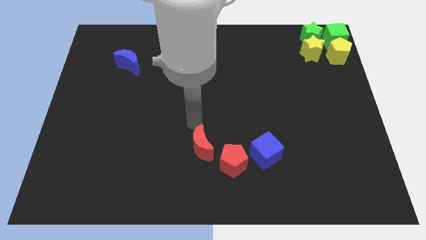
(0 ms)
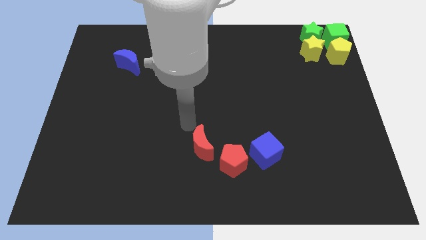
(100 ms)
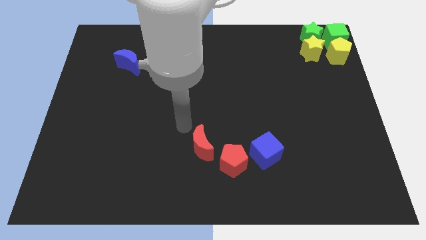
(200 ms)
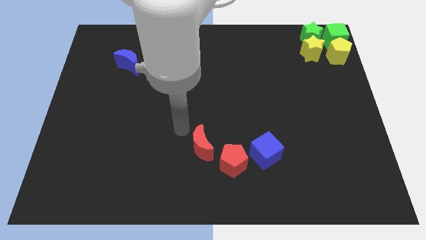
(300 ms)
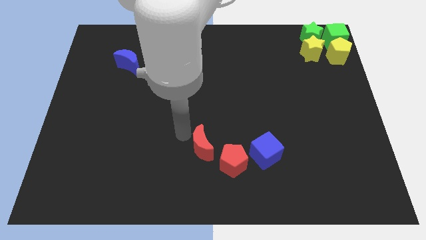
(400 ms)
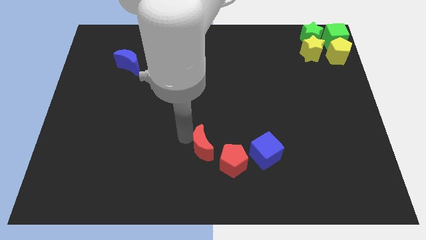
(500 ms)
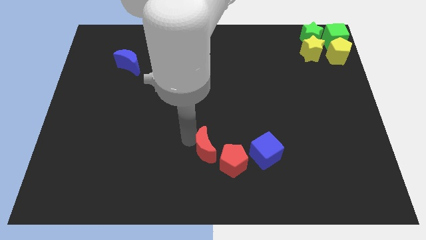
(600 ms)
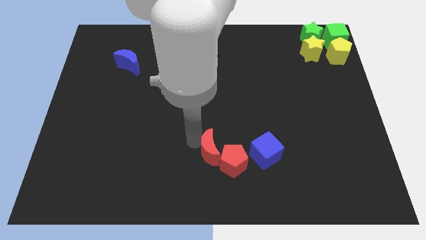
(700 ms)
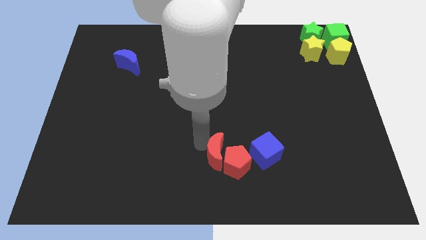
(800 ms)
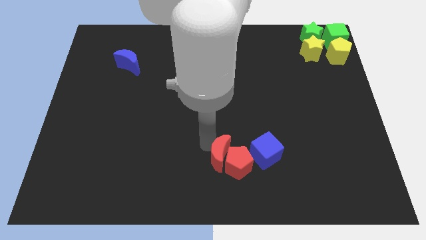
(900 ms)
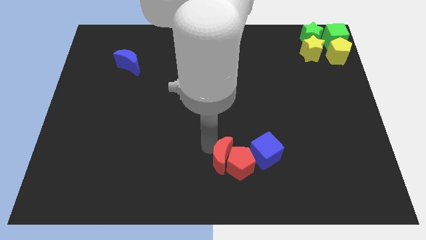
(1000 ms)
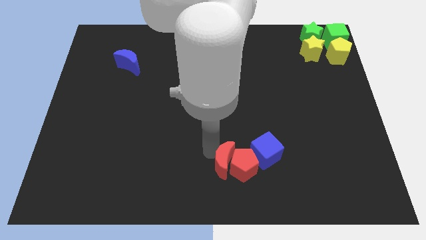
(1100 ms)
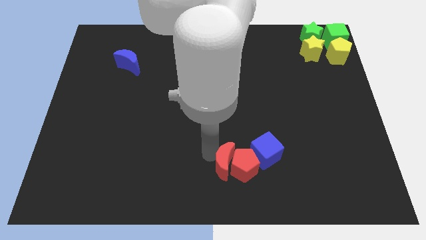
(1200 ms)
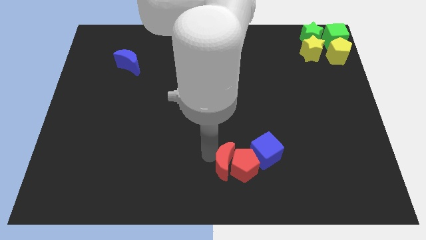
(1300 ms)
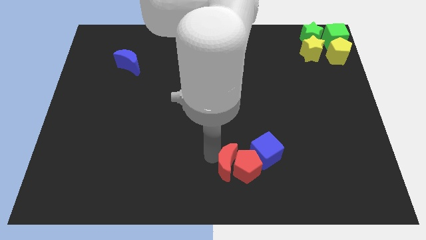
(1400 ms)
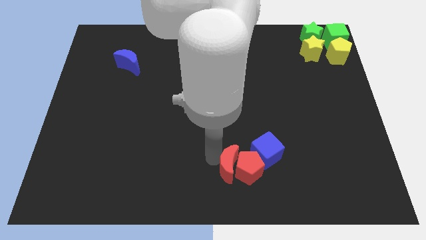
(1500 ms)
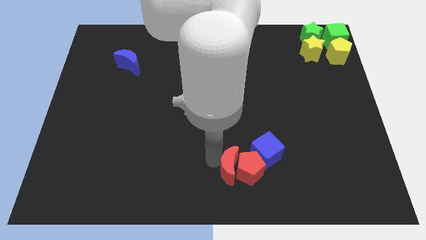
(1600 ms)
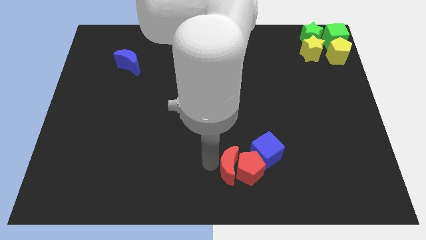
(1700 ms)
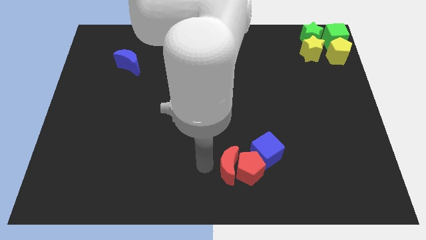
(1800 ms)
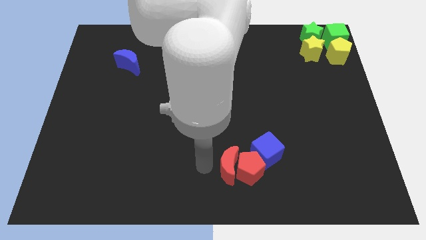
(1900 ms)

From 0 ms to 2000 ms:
move the red moon into the red pentagon

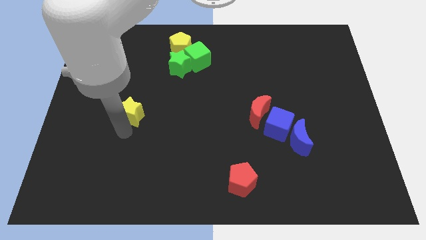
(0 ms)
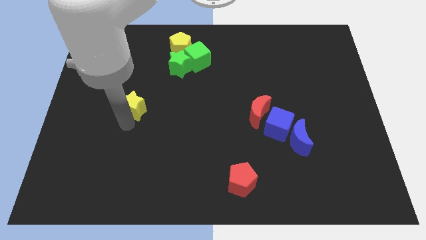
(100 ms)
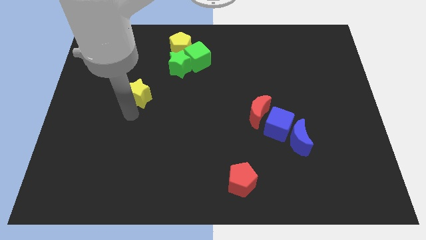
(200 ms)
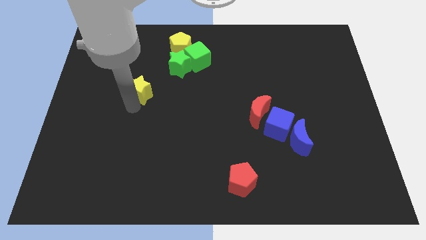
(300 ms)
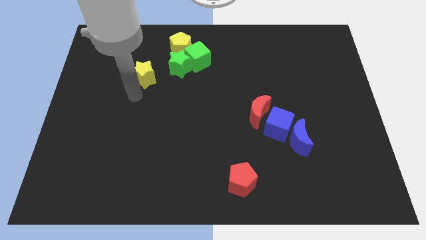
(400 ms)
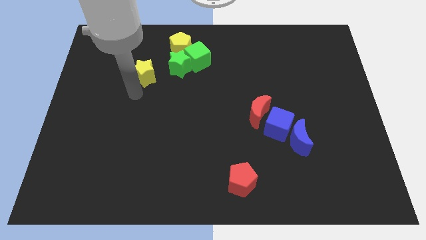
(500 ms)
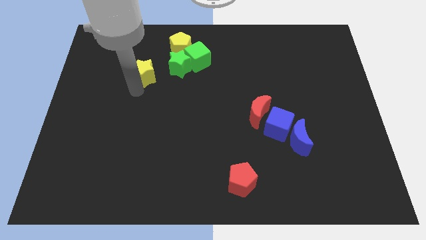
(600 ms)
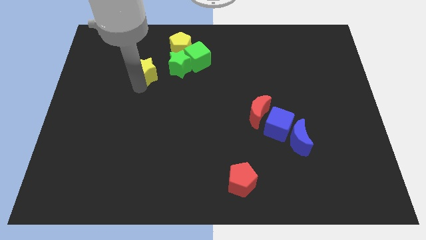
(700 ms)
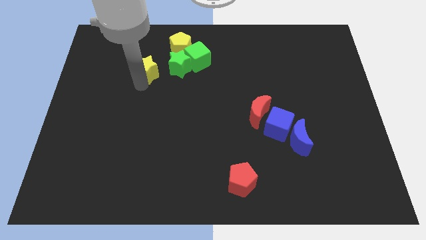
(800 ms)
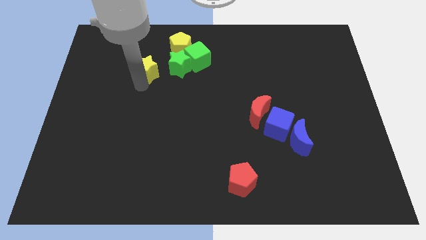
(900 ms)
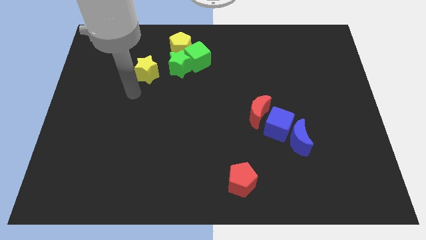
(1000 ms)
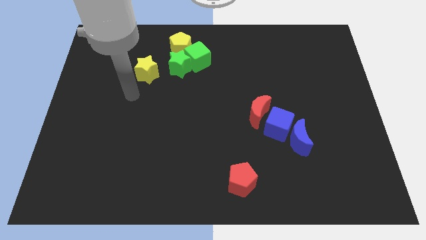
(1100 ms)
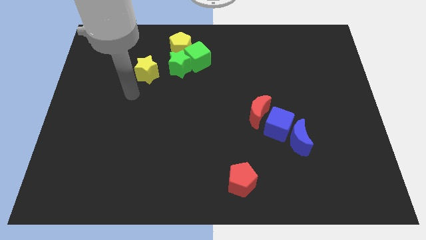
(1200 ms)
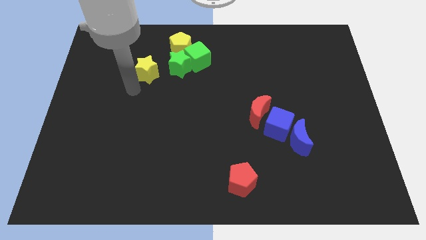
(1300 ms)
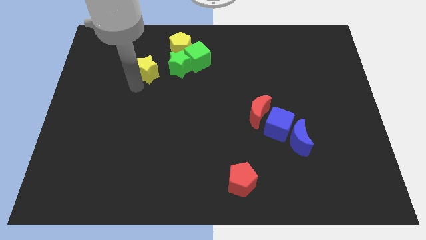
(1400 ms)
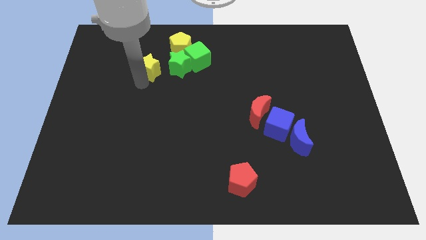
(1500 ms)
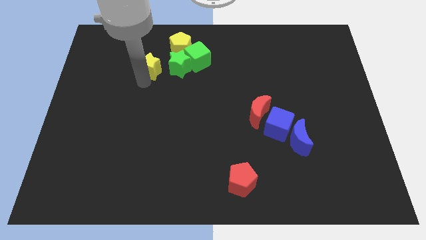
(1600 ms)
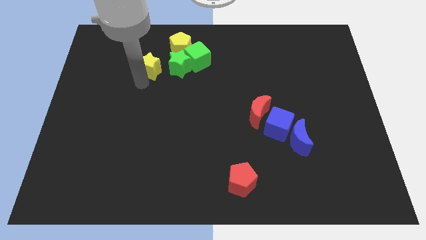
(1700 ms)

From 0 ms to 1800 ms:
move the yellow to the left side of green star

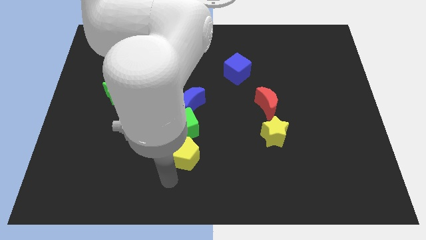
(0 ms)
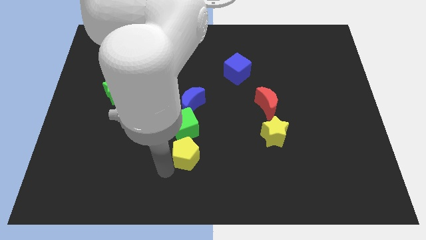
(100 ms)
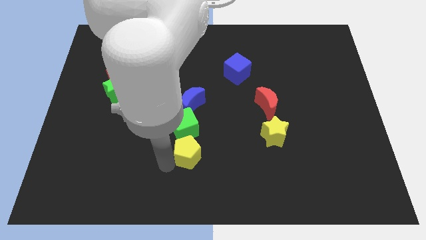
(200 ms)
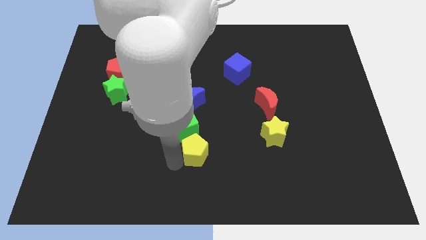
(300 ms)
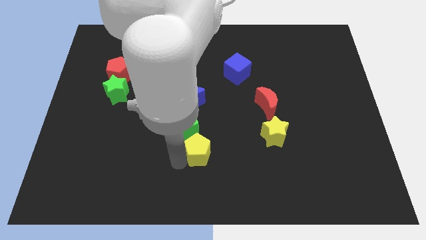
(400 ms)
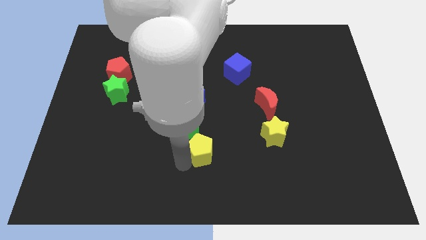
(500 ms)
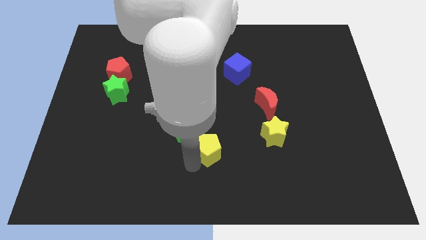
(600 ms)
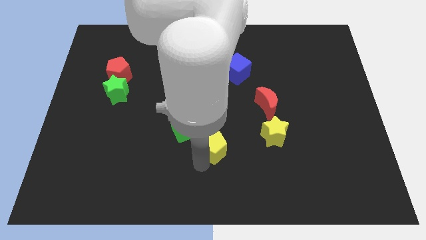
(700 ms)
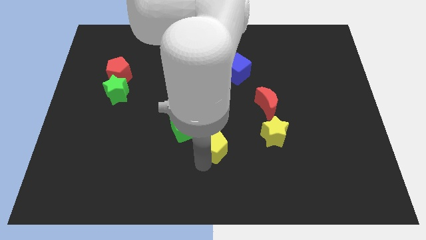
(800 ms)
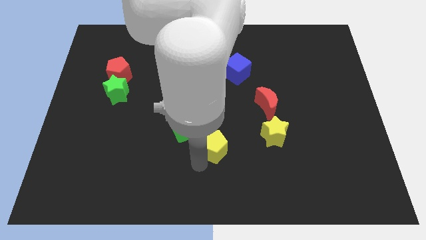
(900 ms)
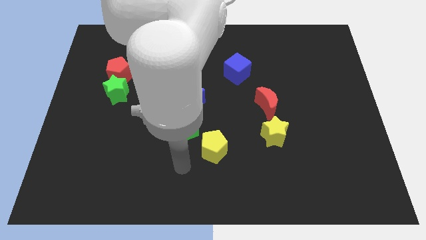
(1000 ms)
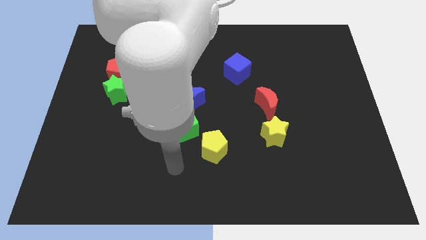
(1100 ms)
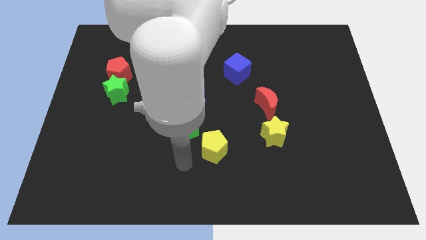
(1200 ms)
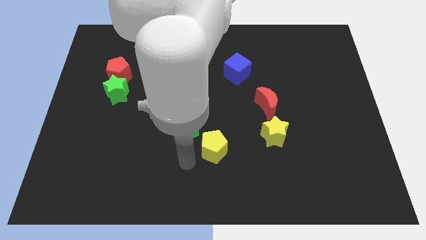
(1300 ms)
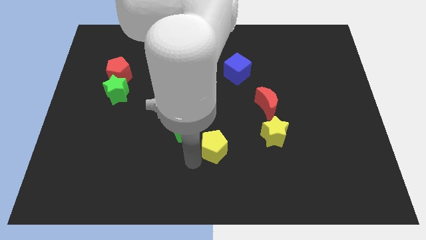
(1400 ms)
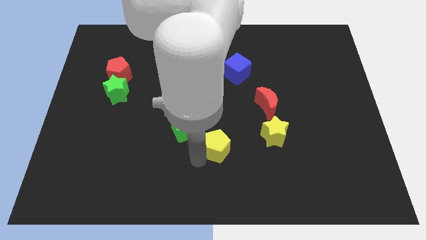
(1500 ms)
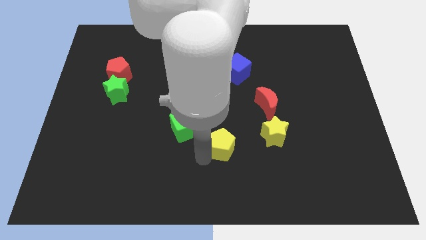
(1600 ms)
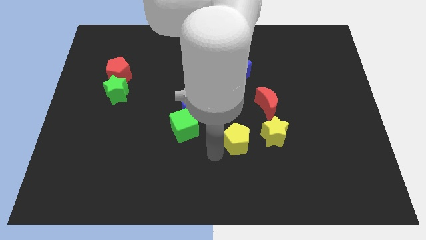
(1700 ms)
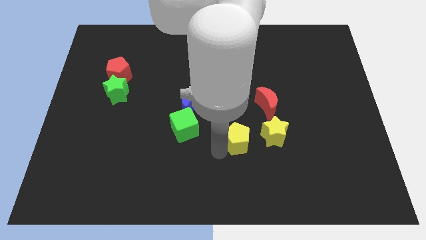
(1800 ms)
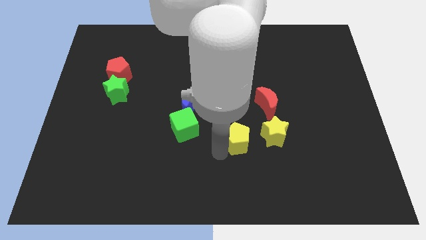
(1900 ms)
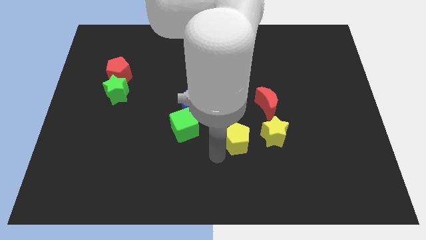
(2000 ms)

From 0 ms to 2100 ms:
push the yellow pentagon to the left of the yellow star

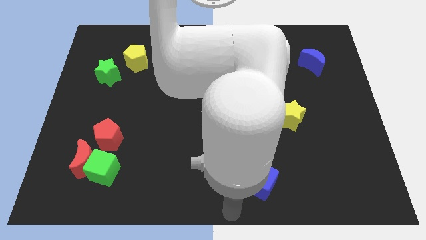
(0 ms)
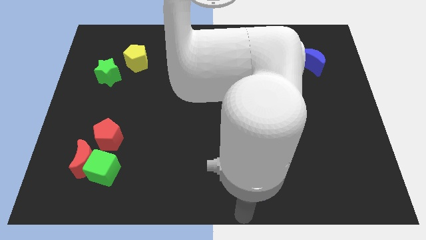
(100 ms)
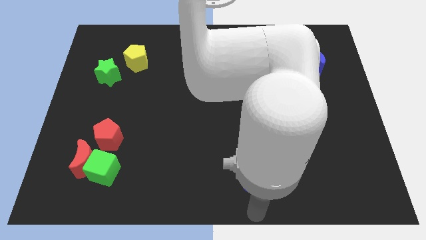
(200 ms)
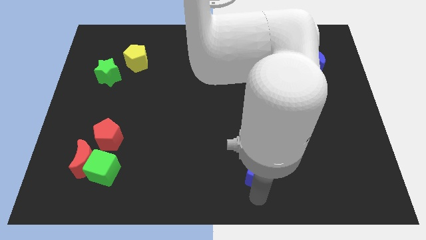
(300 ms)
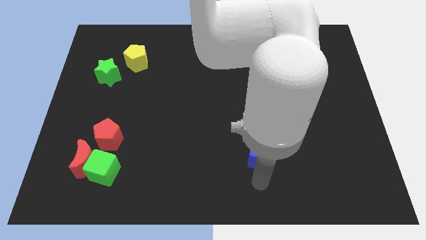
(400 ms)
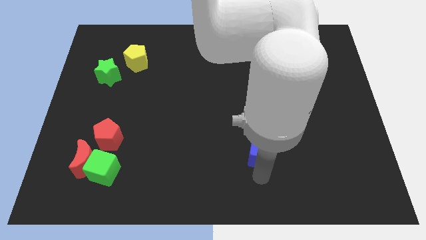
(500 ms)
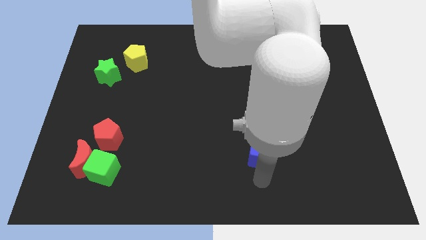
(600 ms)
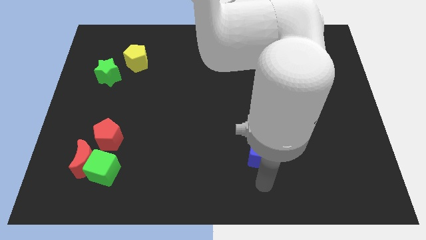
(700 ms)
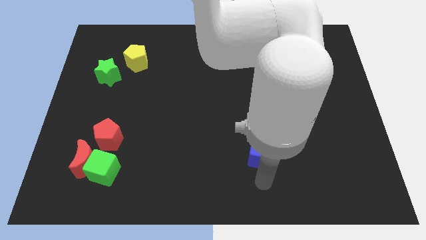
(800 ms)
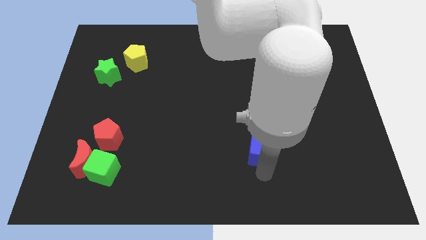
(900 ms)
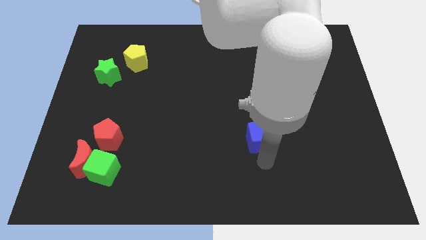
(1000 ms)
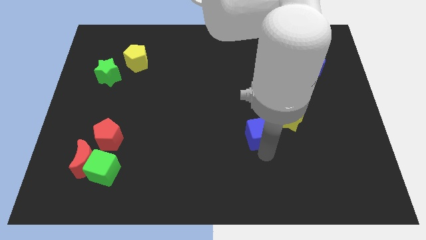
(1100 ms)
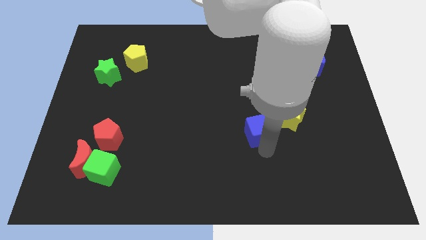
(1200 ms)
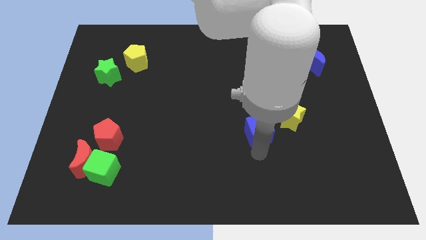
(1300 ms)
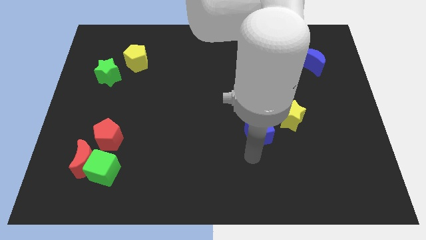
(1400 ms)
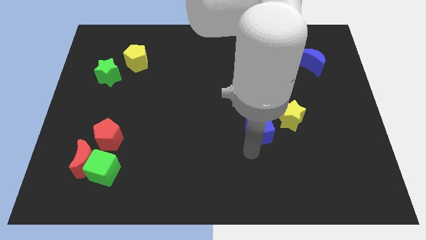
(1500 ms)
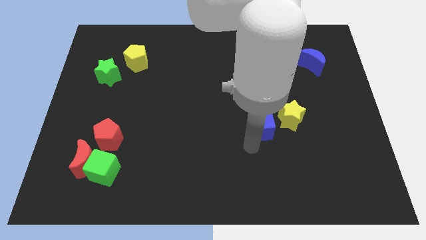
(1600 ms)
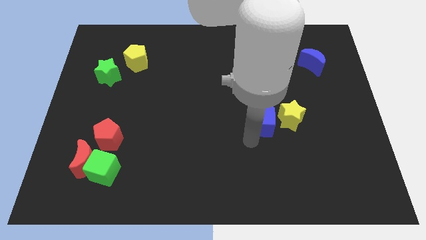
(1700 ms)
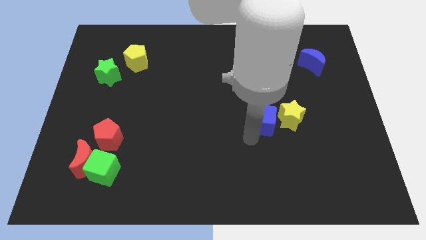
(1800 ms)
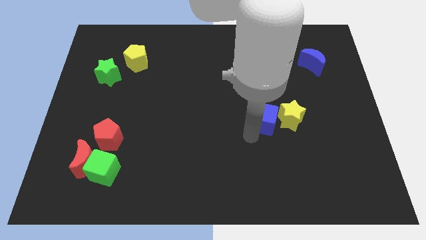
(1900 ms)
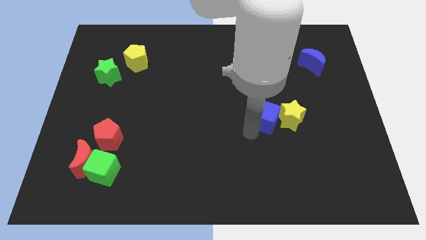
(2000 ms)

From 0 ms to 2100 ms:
move the blue cube left to the yellow star

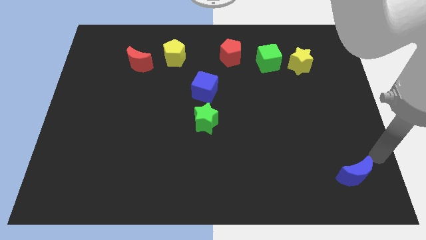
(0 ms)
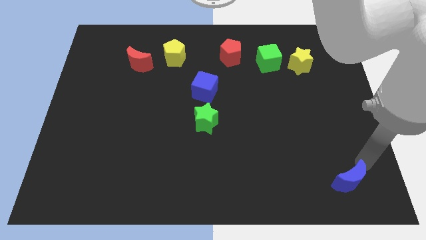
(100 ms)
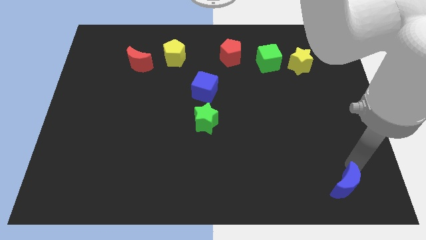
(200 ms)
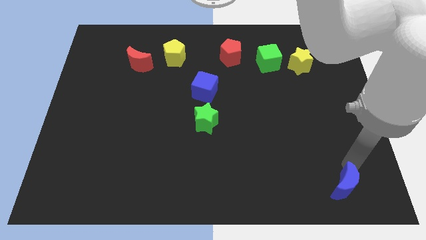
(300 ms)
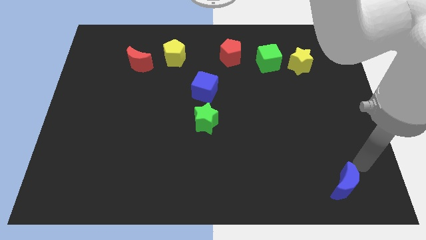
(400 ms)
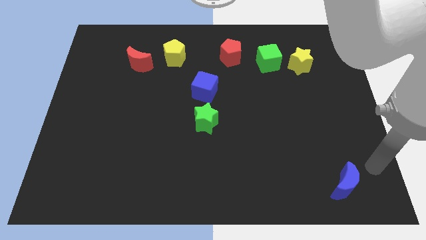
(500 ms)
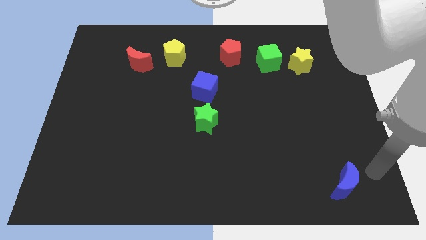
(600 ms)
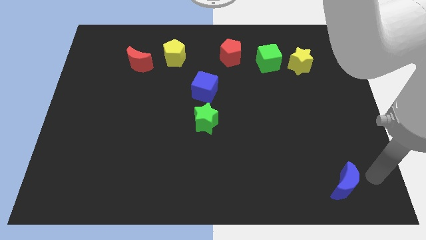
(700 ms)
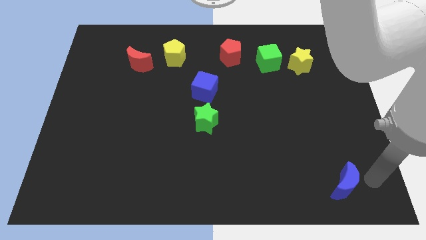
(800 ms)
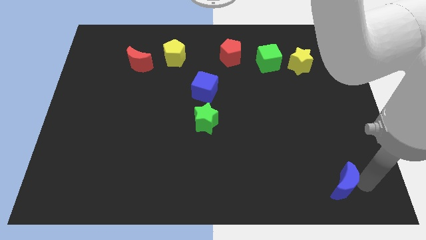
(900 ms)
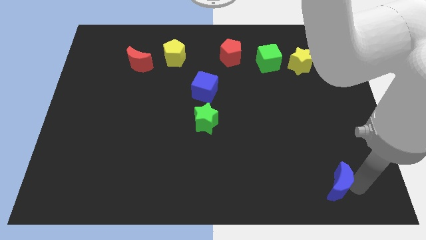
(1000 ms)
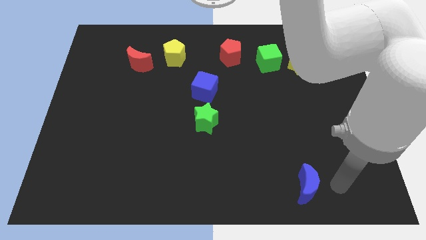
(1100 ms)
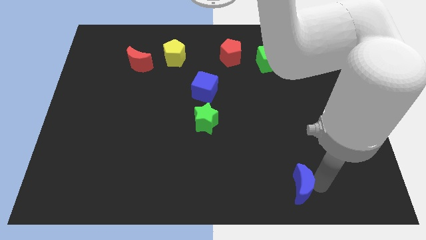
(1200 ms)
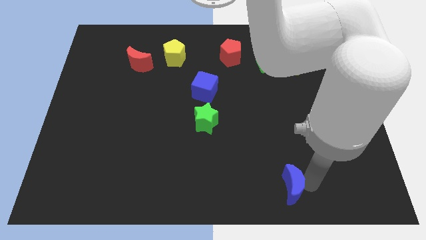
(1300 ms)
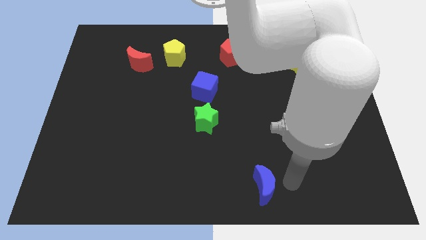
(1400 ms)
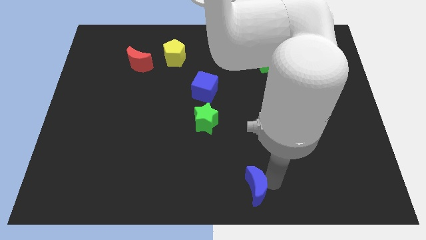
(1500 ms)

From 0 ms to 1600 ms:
push the blue moon to the bottom center
